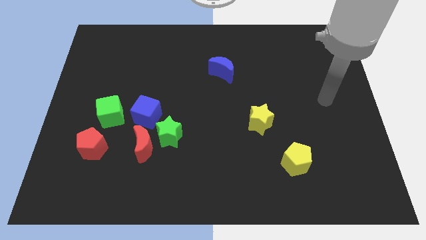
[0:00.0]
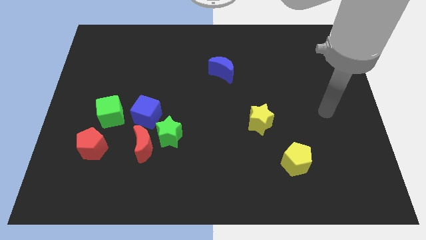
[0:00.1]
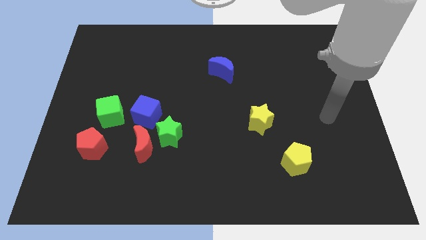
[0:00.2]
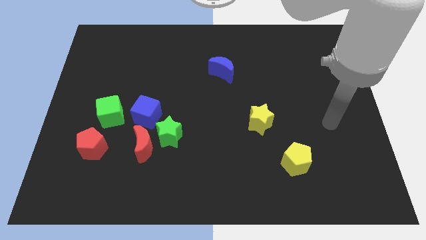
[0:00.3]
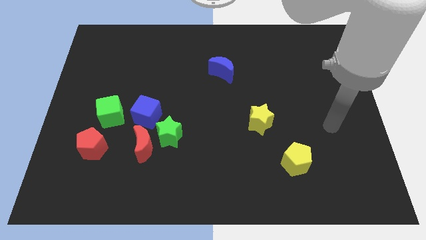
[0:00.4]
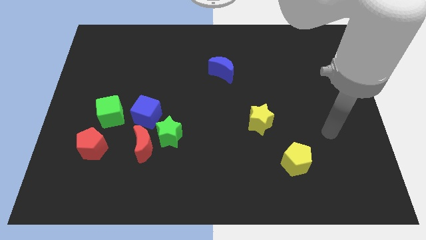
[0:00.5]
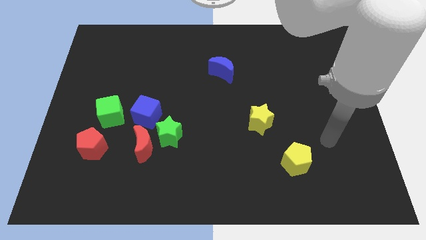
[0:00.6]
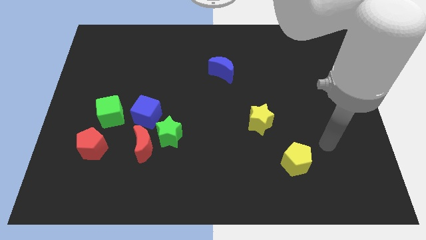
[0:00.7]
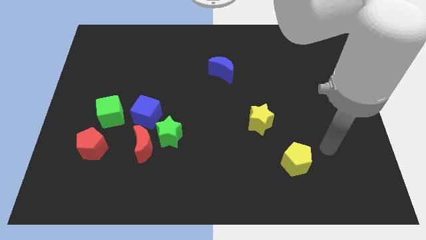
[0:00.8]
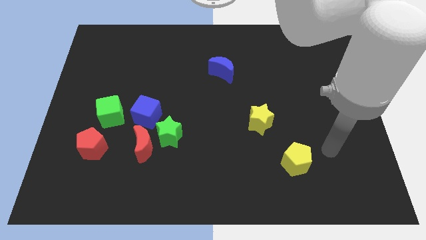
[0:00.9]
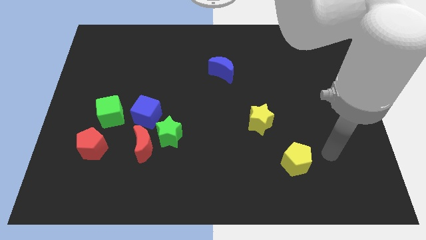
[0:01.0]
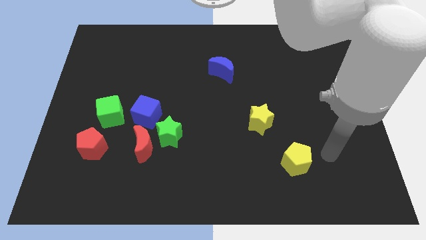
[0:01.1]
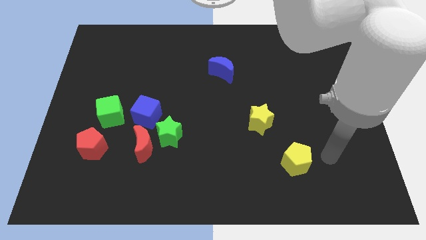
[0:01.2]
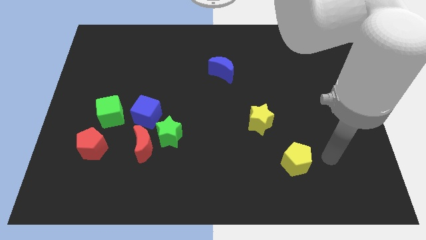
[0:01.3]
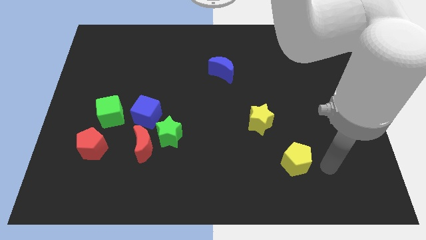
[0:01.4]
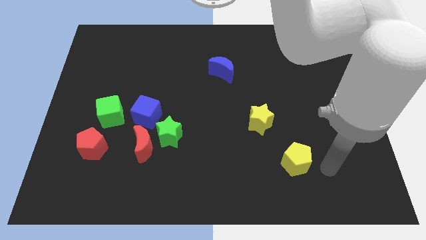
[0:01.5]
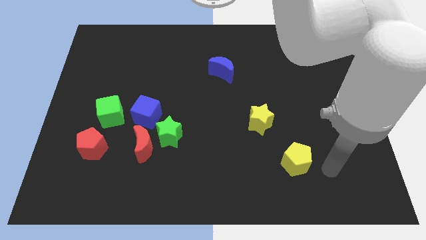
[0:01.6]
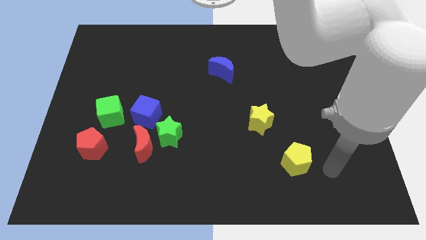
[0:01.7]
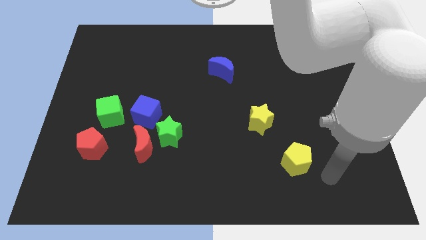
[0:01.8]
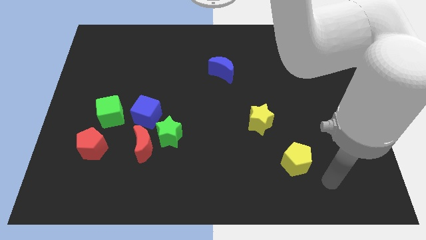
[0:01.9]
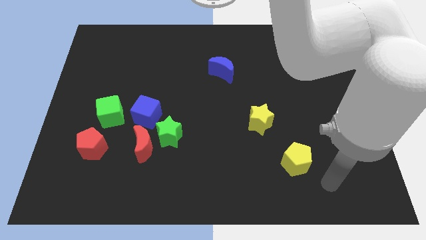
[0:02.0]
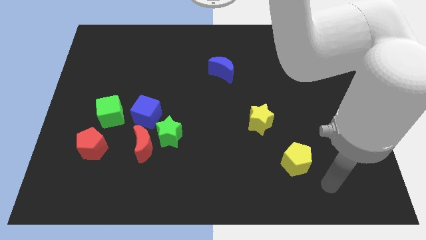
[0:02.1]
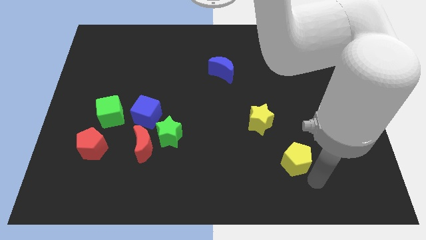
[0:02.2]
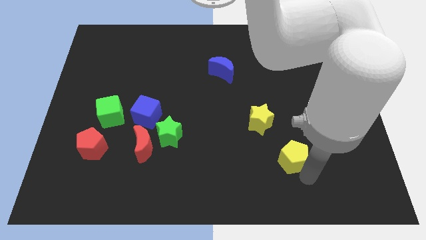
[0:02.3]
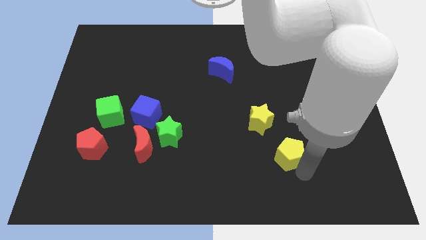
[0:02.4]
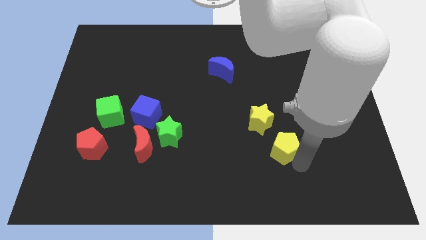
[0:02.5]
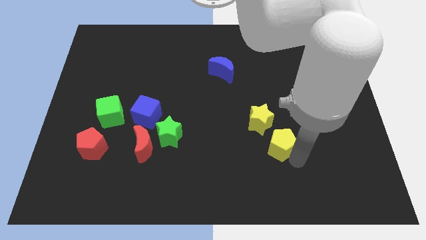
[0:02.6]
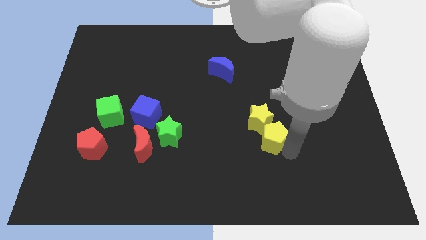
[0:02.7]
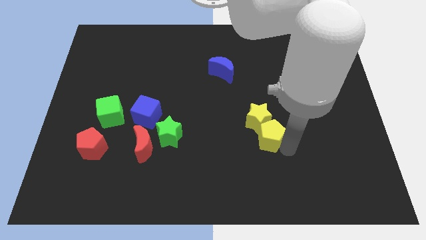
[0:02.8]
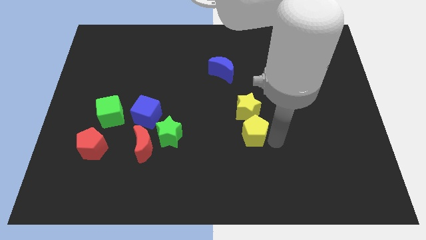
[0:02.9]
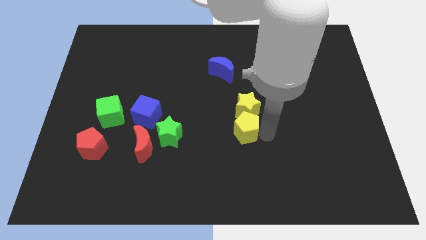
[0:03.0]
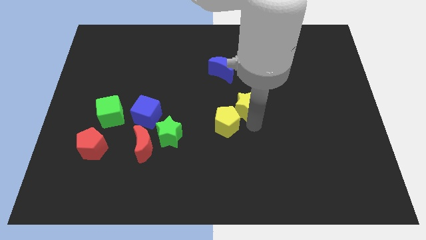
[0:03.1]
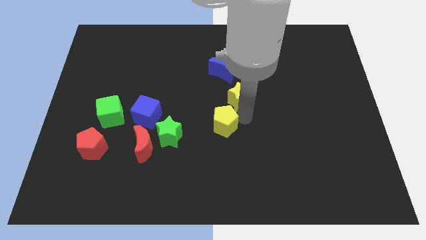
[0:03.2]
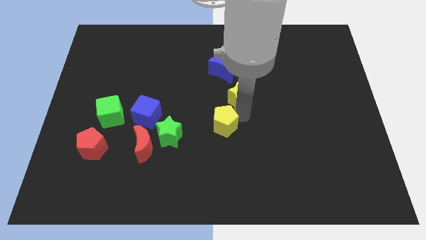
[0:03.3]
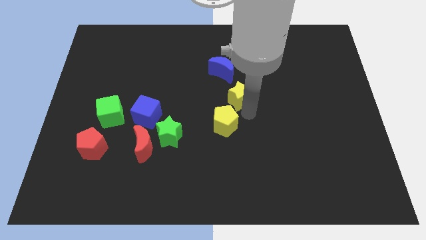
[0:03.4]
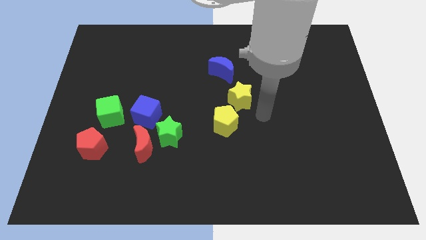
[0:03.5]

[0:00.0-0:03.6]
move the yellow pentagon to the center of the board

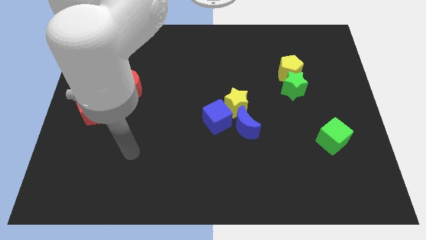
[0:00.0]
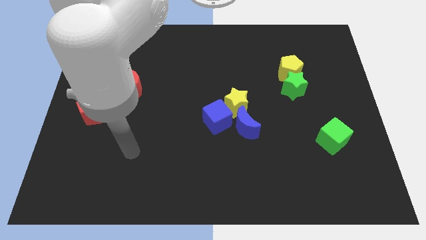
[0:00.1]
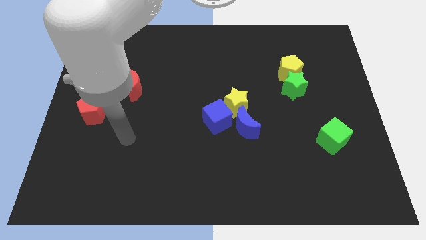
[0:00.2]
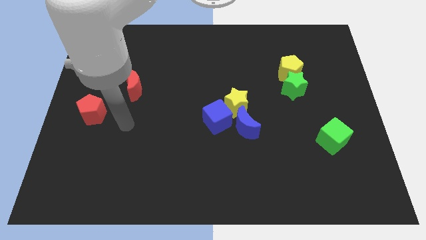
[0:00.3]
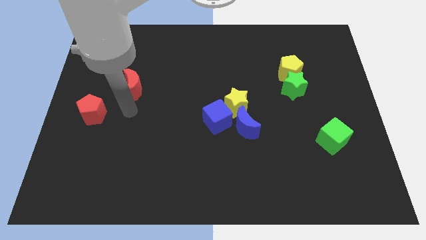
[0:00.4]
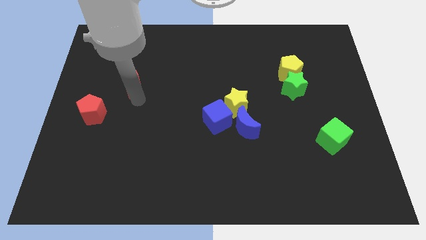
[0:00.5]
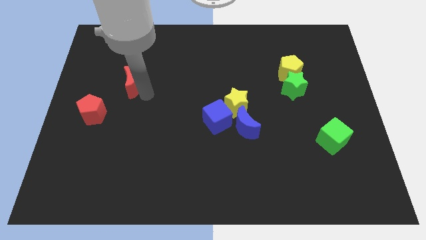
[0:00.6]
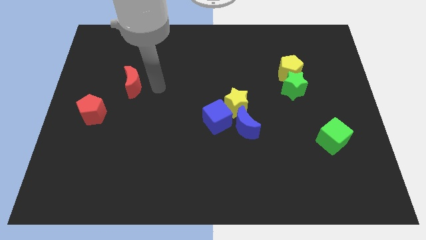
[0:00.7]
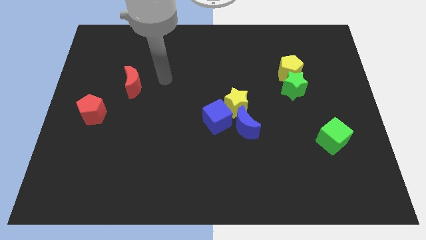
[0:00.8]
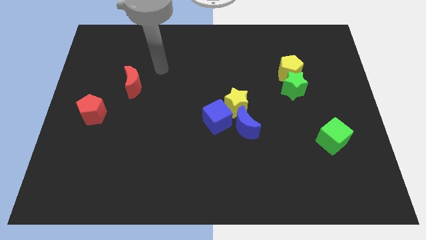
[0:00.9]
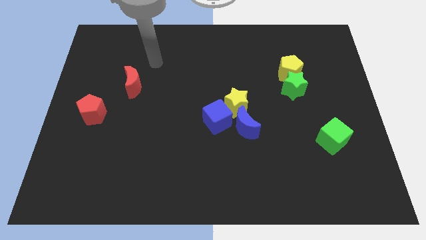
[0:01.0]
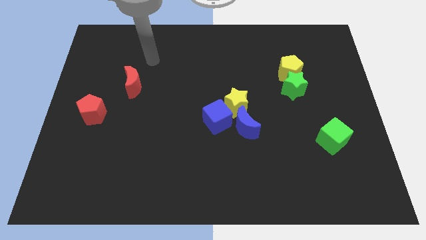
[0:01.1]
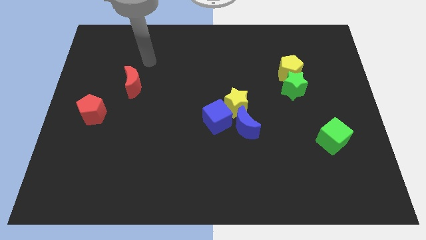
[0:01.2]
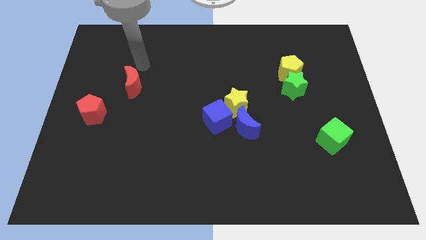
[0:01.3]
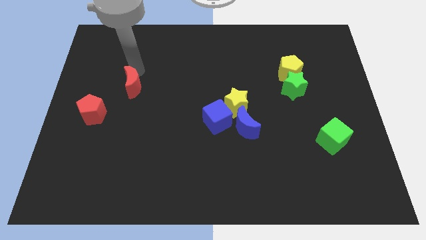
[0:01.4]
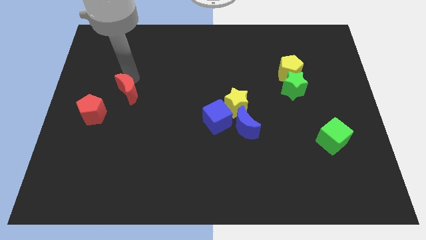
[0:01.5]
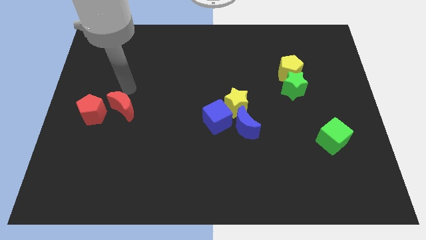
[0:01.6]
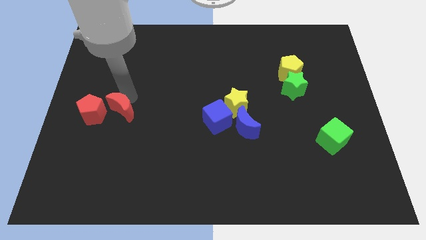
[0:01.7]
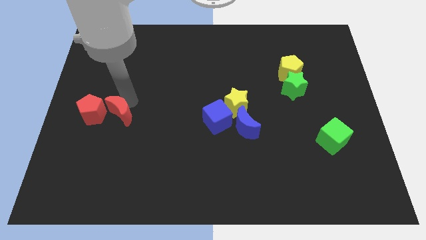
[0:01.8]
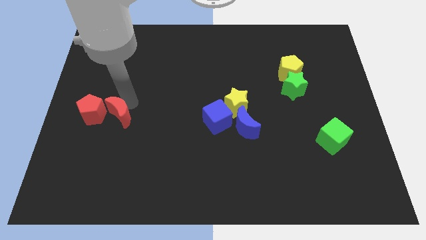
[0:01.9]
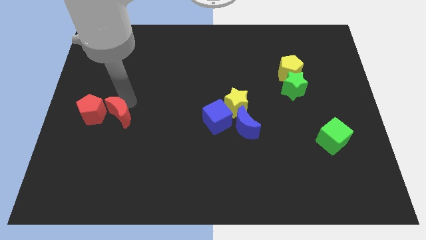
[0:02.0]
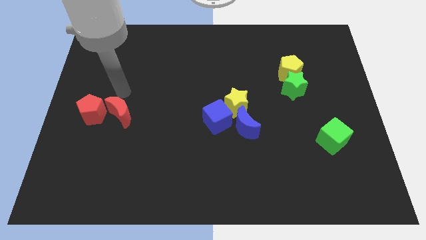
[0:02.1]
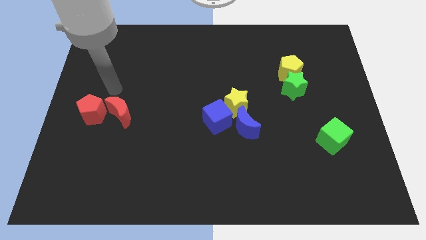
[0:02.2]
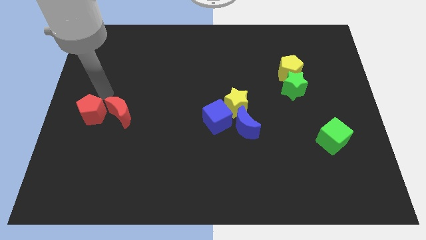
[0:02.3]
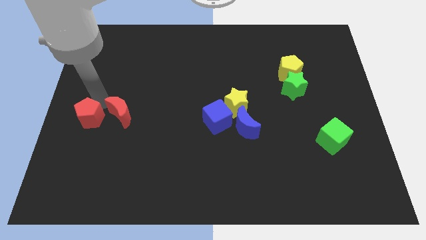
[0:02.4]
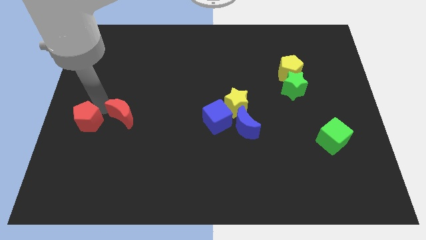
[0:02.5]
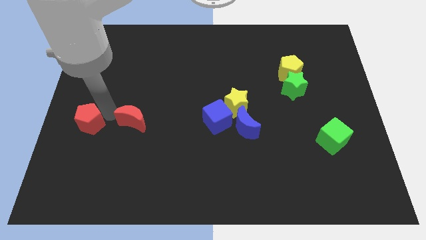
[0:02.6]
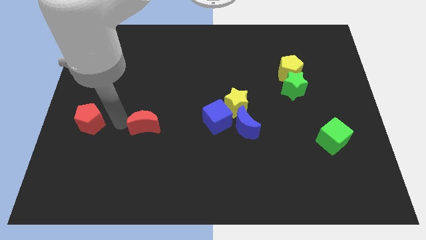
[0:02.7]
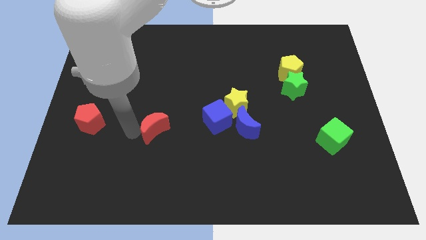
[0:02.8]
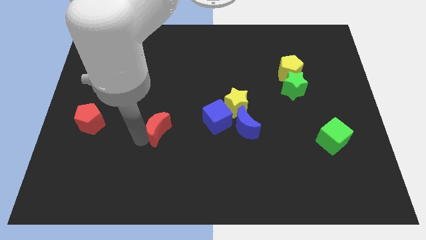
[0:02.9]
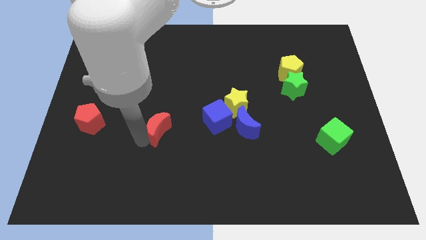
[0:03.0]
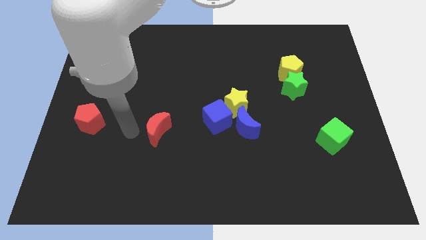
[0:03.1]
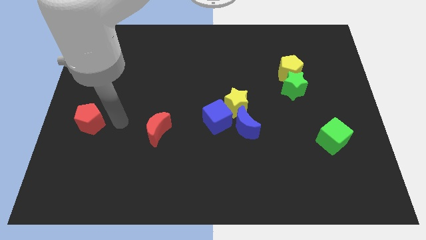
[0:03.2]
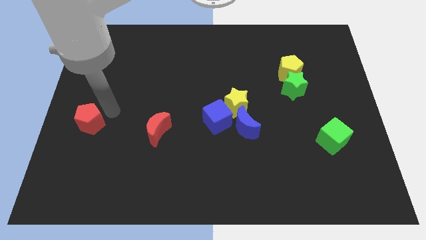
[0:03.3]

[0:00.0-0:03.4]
move the red moon diagonal to the right of the red pentagon

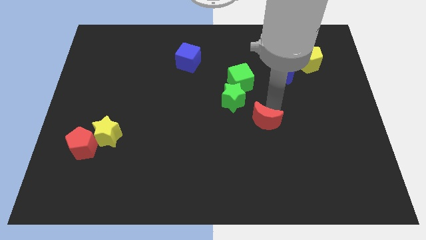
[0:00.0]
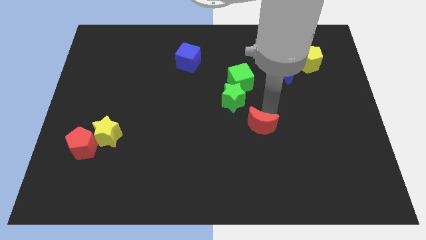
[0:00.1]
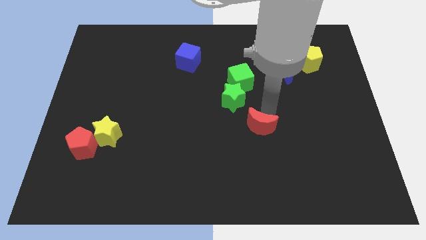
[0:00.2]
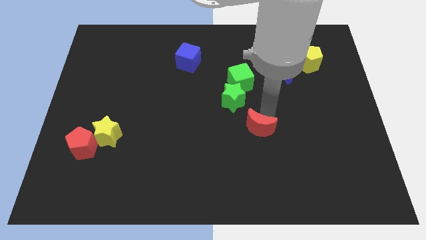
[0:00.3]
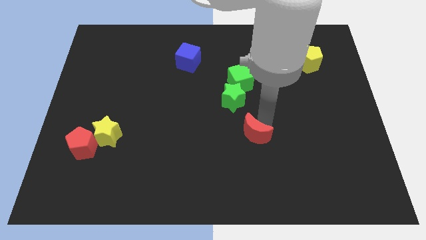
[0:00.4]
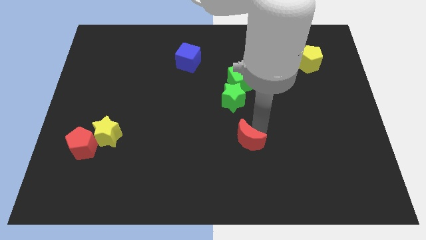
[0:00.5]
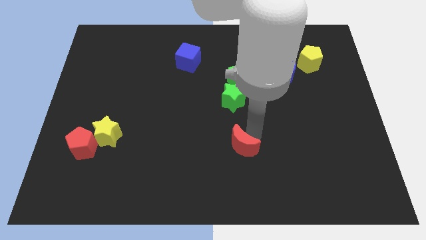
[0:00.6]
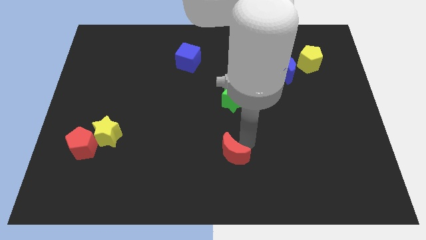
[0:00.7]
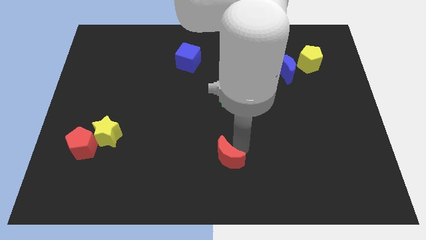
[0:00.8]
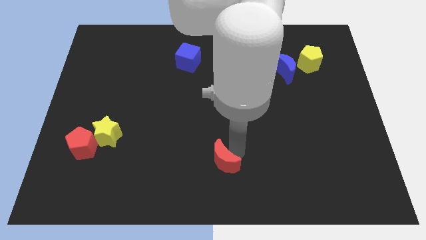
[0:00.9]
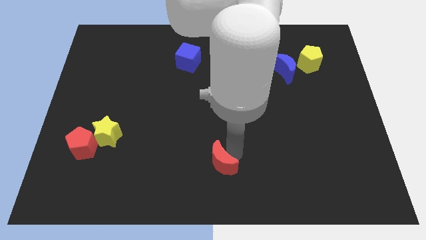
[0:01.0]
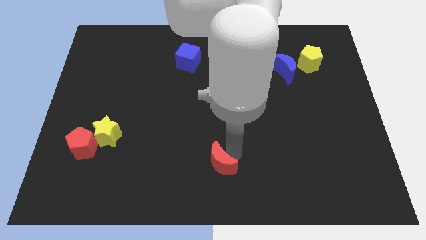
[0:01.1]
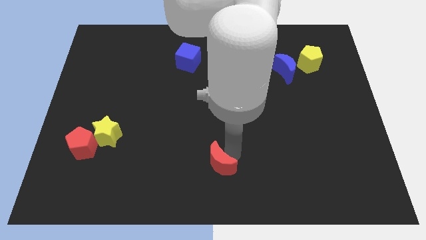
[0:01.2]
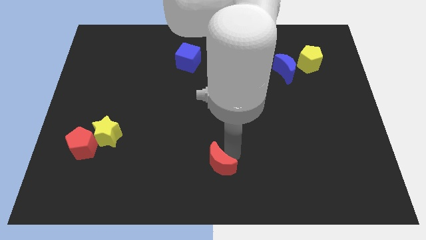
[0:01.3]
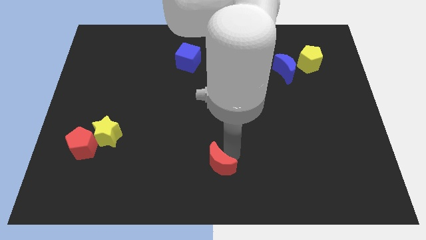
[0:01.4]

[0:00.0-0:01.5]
push the red crescent to the bottom side of the board

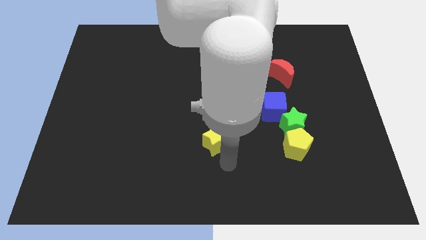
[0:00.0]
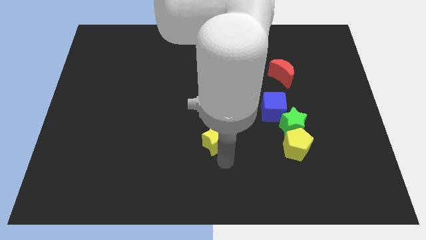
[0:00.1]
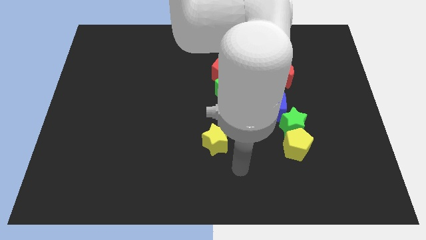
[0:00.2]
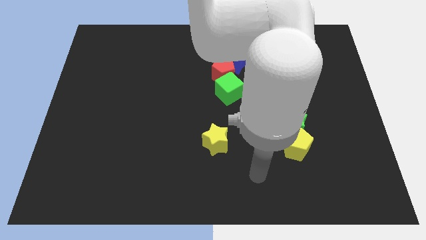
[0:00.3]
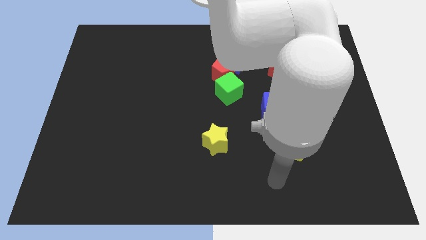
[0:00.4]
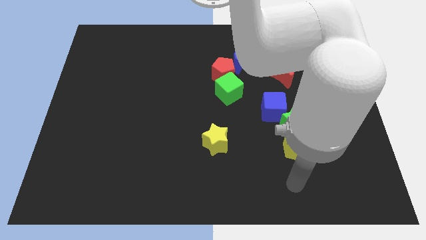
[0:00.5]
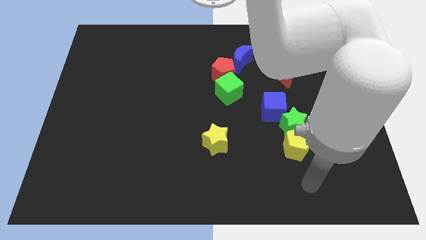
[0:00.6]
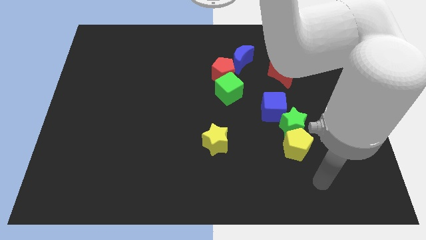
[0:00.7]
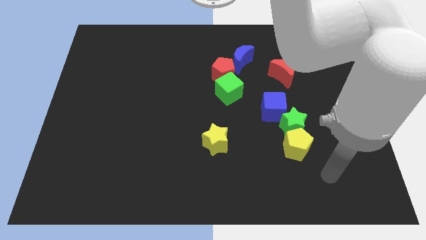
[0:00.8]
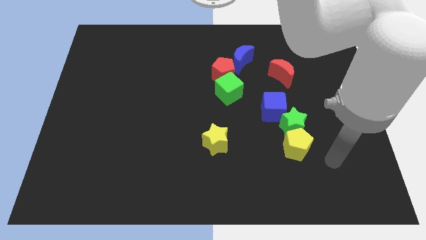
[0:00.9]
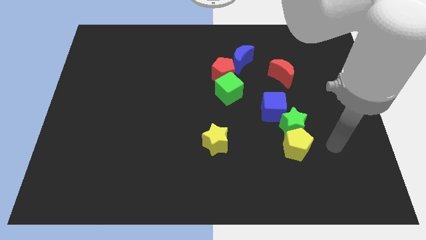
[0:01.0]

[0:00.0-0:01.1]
put your hand to the right of the yellow pentagon
